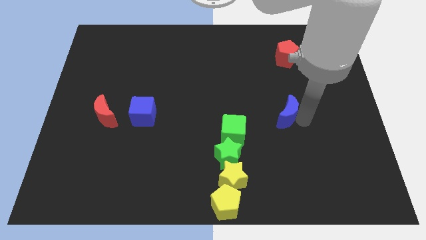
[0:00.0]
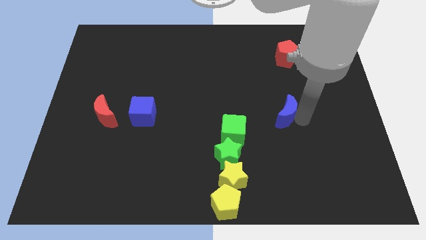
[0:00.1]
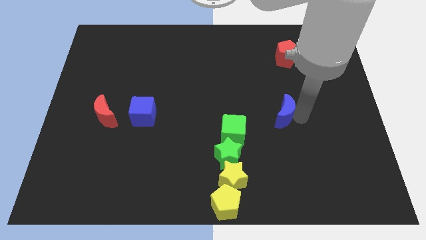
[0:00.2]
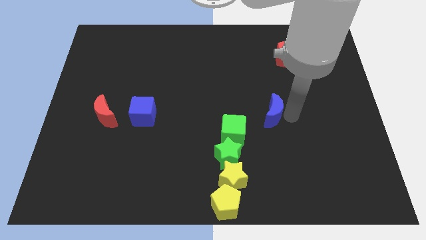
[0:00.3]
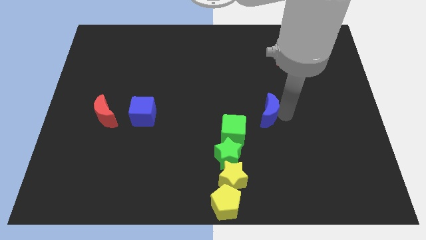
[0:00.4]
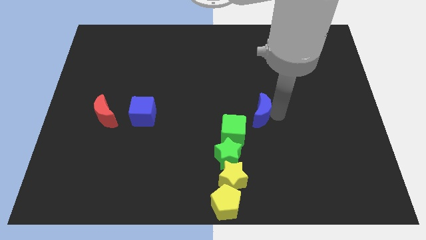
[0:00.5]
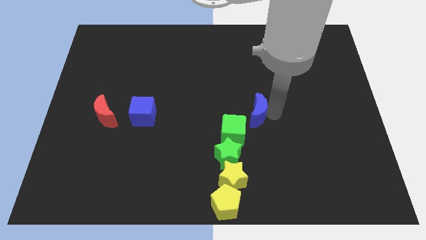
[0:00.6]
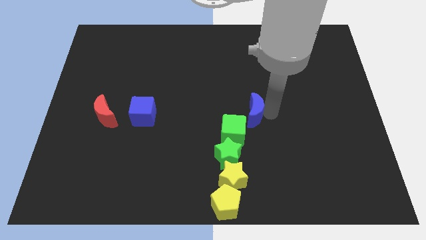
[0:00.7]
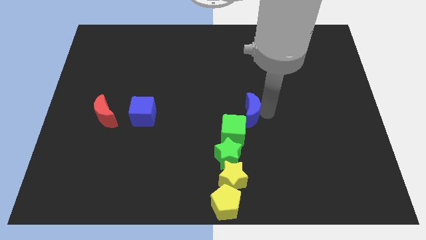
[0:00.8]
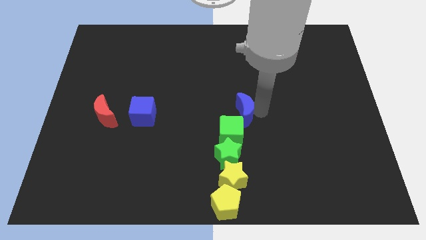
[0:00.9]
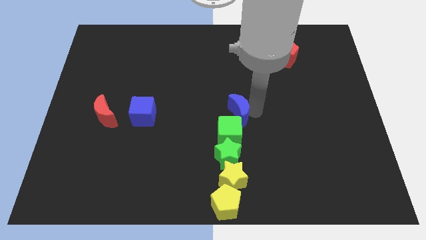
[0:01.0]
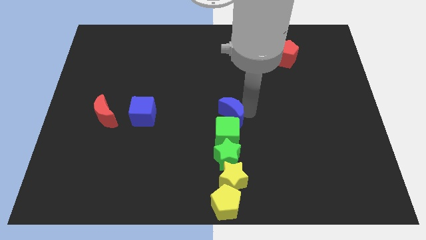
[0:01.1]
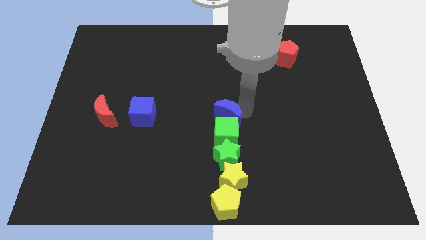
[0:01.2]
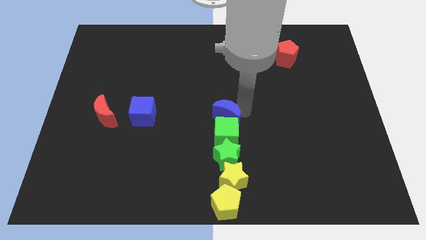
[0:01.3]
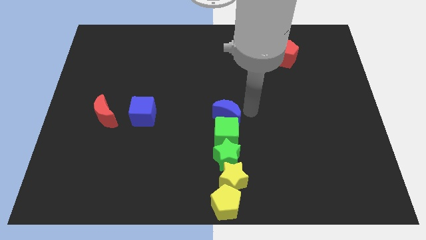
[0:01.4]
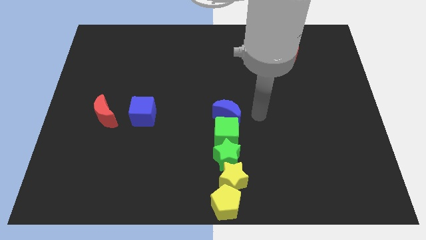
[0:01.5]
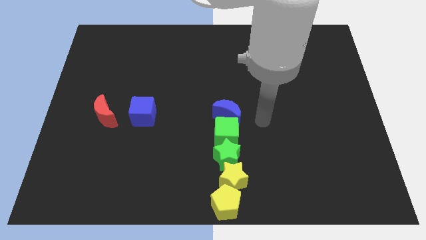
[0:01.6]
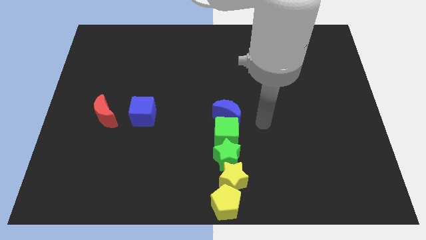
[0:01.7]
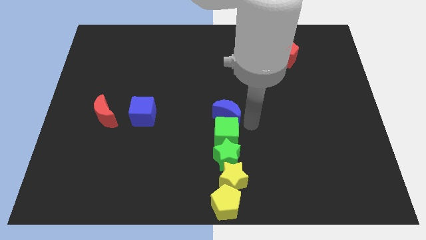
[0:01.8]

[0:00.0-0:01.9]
push the blue moon to the top of the green cube

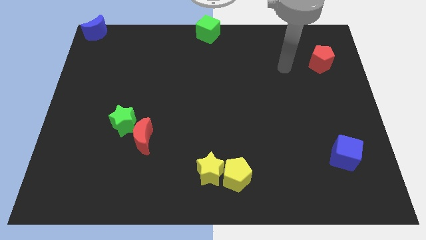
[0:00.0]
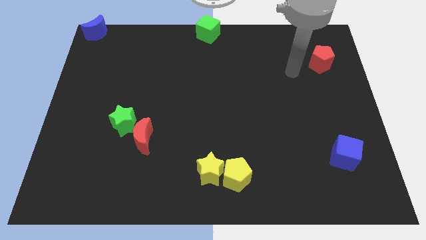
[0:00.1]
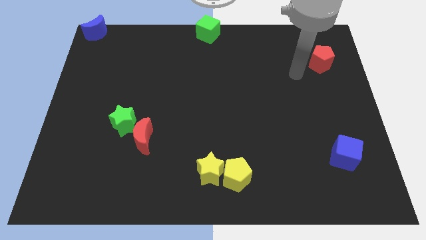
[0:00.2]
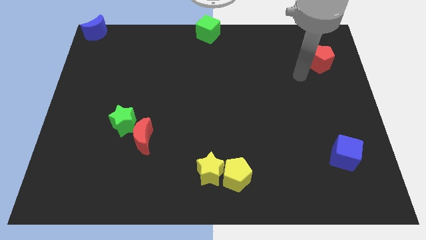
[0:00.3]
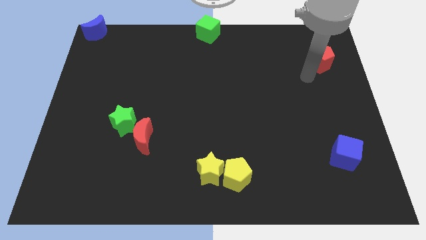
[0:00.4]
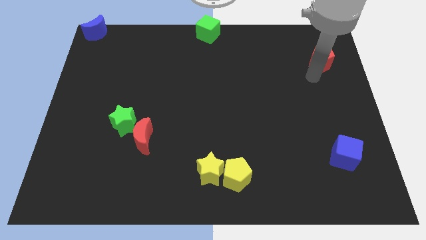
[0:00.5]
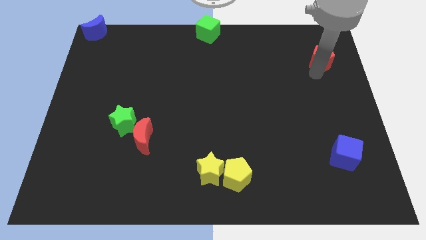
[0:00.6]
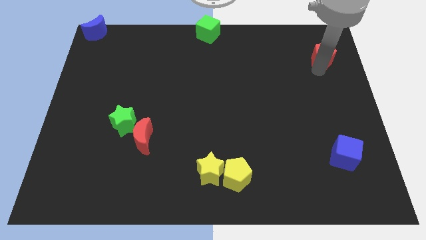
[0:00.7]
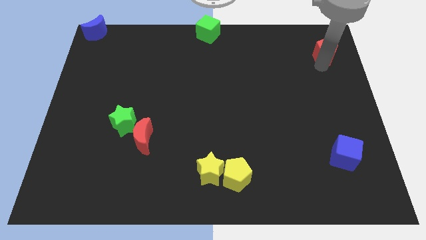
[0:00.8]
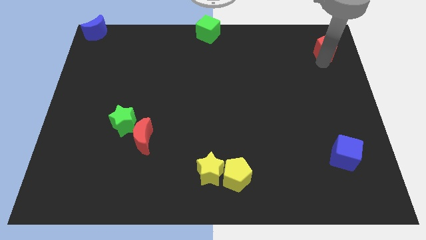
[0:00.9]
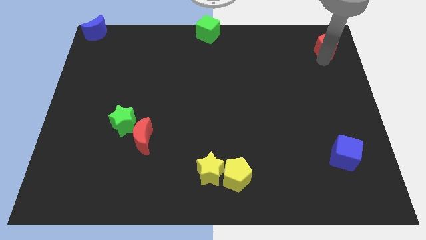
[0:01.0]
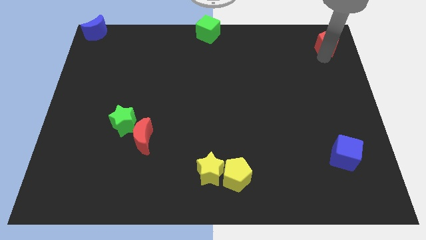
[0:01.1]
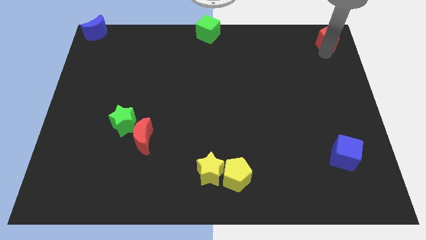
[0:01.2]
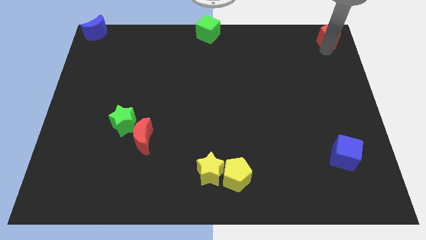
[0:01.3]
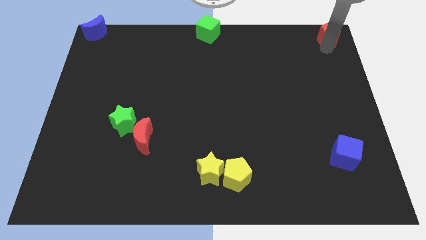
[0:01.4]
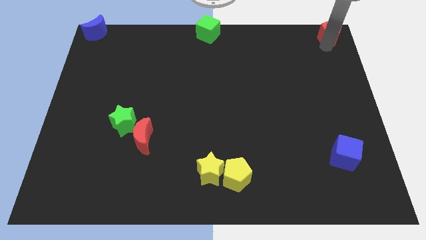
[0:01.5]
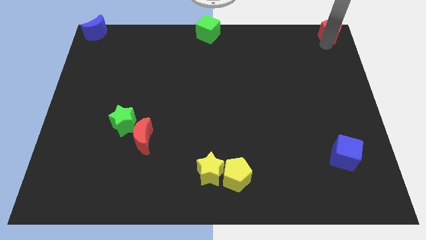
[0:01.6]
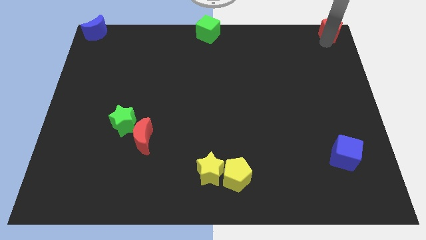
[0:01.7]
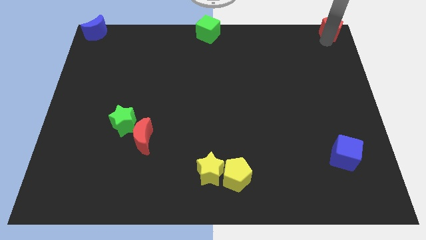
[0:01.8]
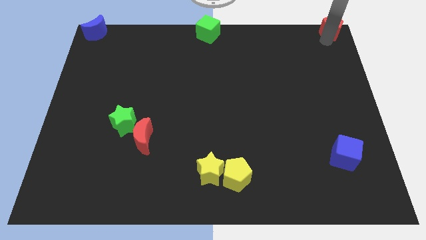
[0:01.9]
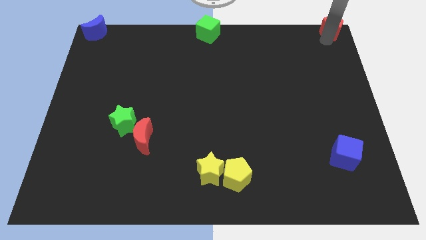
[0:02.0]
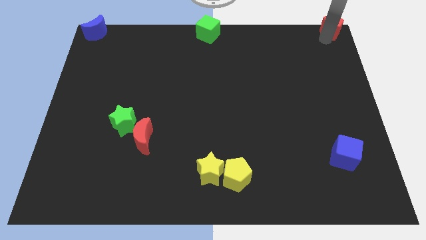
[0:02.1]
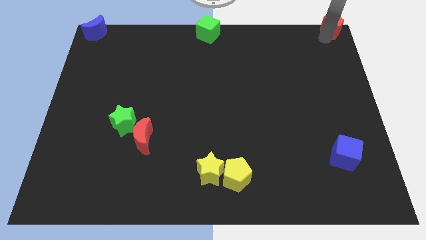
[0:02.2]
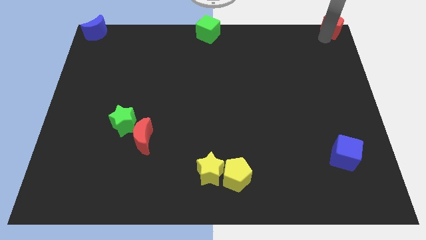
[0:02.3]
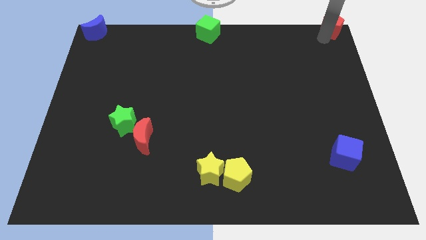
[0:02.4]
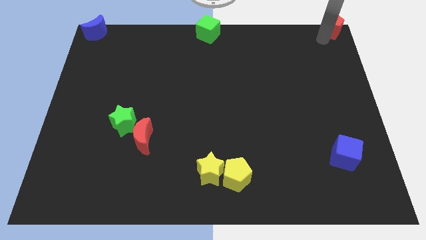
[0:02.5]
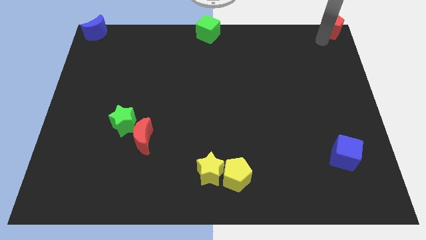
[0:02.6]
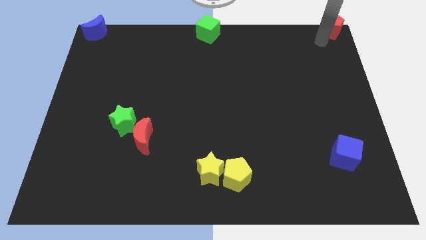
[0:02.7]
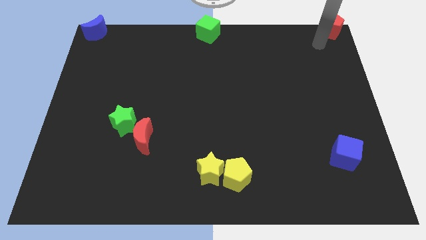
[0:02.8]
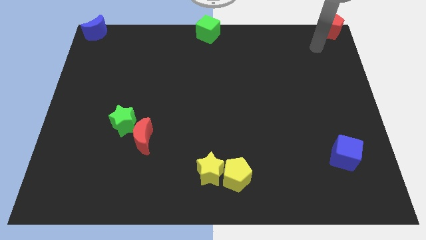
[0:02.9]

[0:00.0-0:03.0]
push the red pentagon towards the top right corner of the board

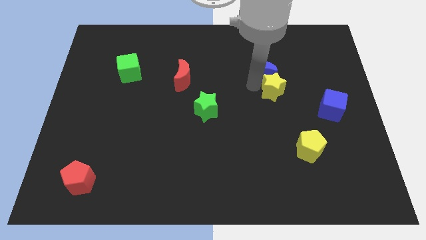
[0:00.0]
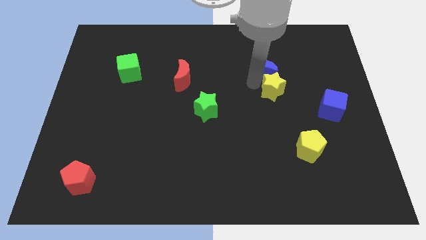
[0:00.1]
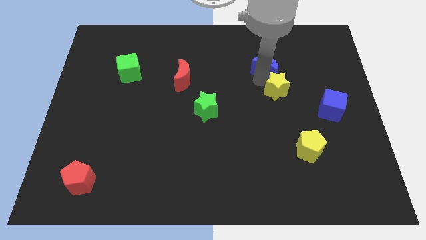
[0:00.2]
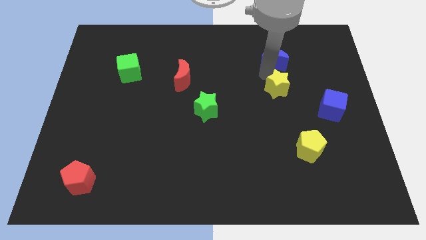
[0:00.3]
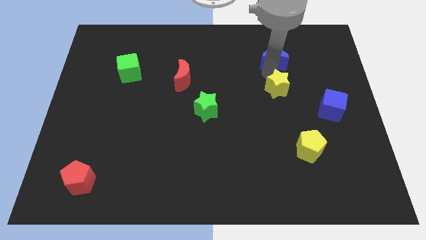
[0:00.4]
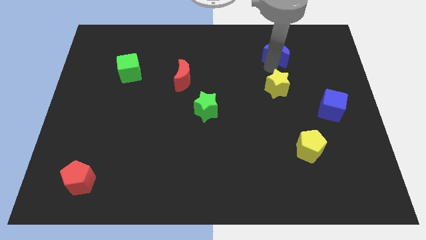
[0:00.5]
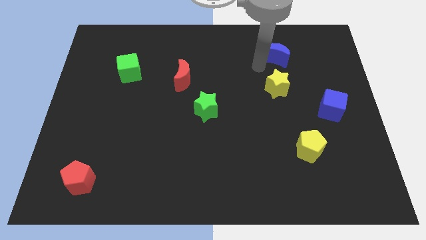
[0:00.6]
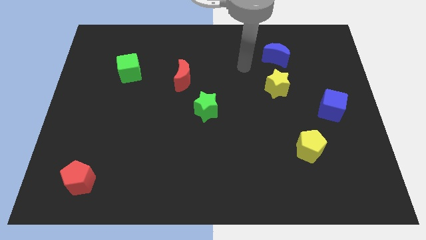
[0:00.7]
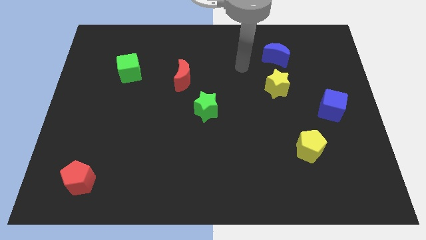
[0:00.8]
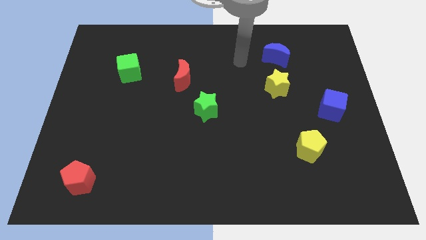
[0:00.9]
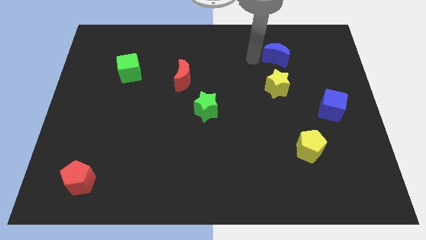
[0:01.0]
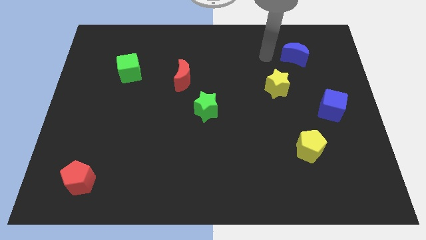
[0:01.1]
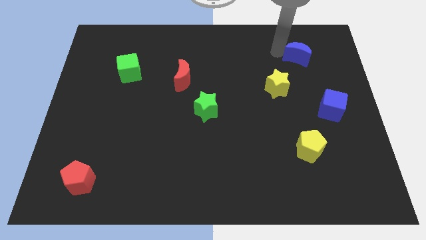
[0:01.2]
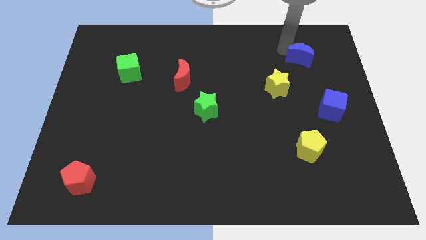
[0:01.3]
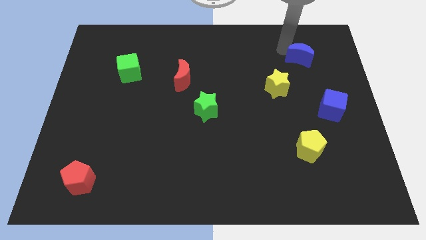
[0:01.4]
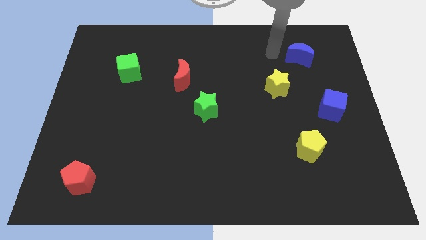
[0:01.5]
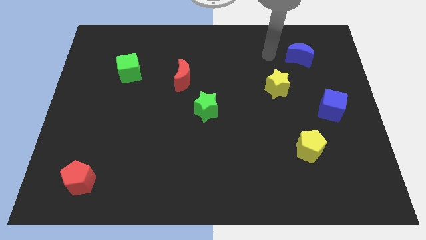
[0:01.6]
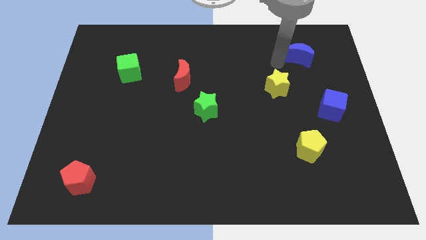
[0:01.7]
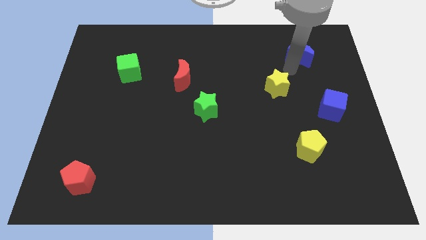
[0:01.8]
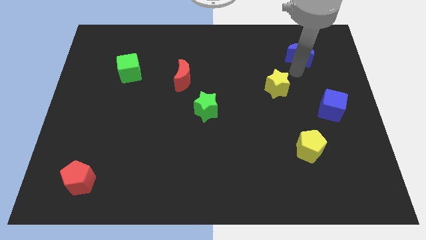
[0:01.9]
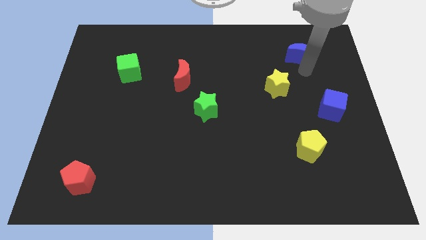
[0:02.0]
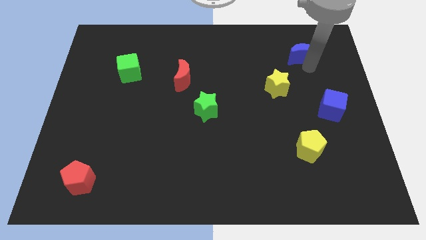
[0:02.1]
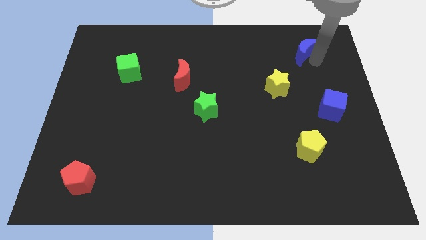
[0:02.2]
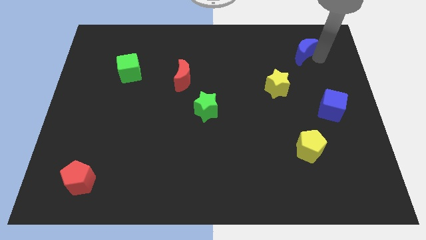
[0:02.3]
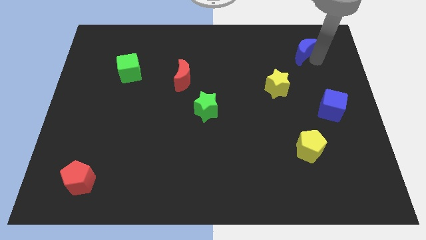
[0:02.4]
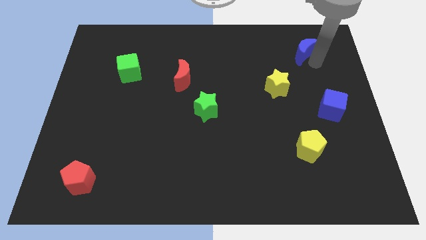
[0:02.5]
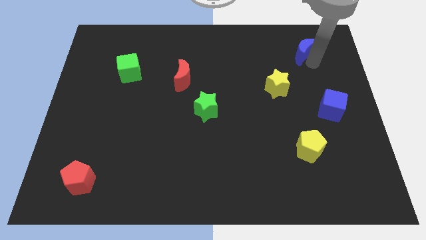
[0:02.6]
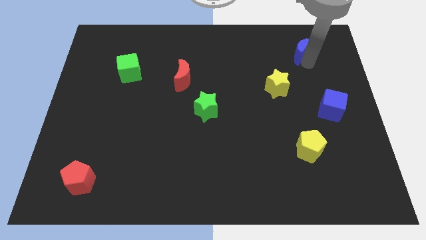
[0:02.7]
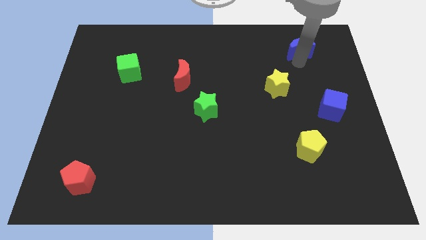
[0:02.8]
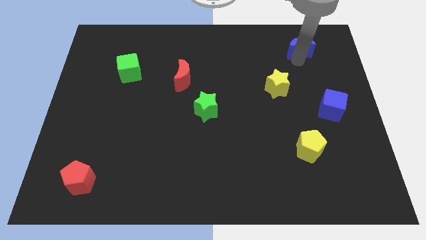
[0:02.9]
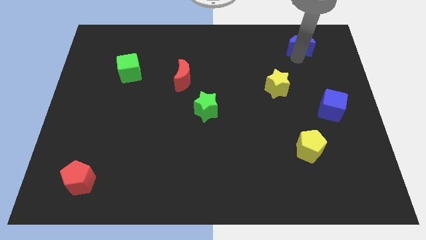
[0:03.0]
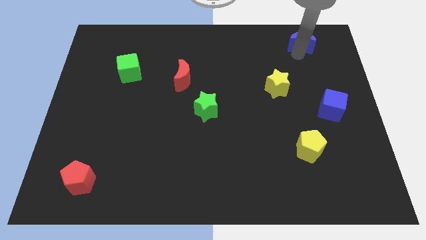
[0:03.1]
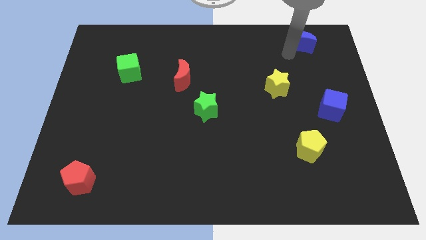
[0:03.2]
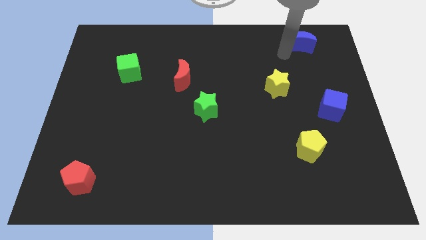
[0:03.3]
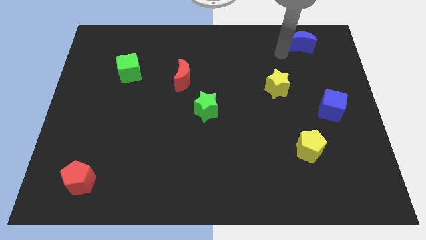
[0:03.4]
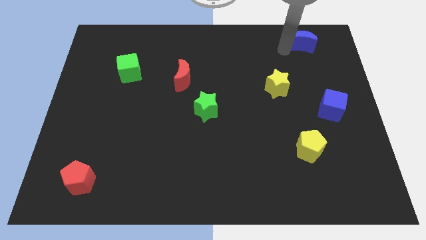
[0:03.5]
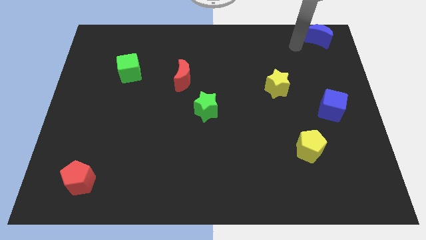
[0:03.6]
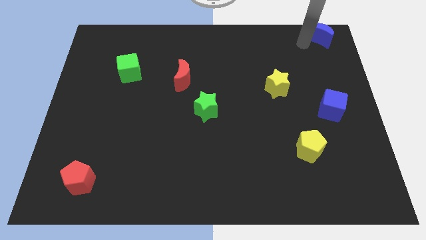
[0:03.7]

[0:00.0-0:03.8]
move the blue moon to the top right side of the board

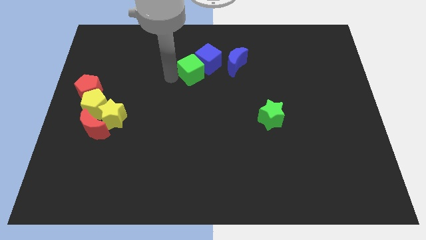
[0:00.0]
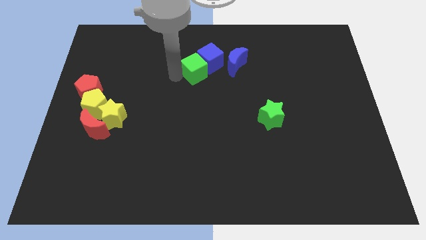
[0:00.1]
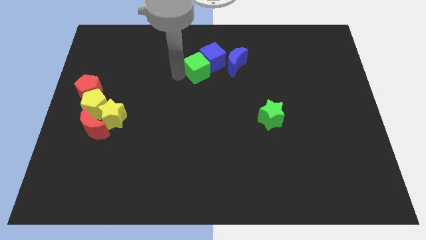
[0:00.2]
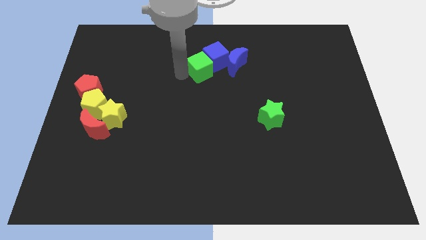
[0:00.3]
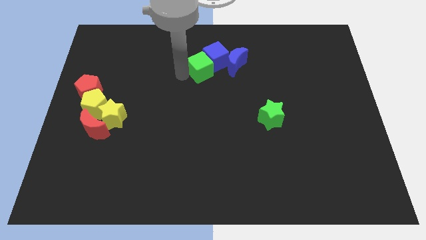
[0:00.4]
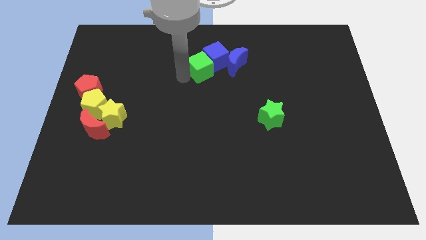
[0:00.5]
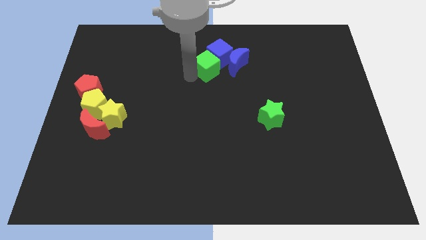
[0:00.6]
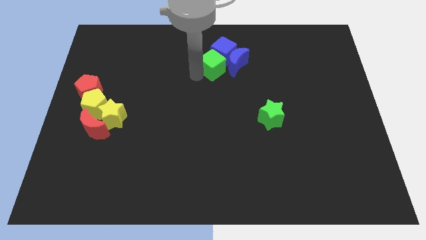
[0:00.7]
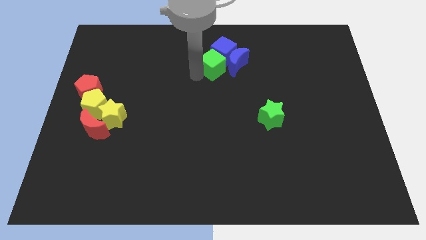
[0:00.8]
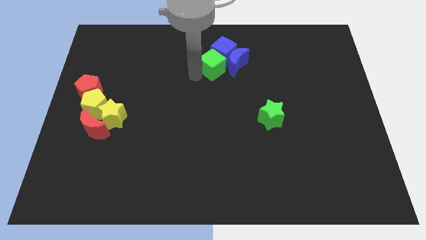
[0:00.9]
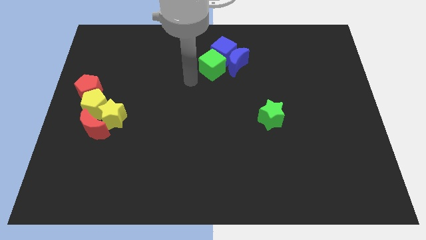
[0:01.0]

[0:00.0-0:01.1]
slide the green cube towards the blue crescent
